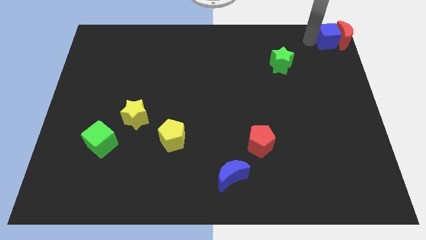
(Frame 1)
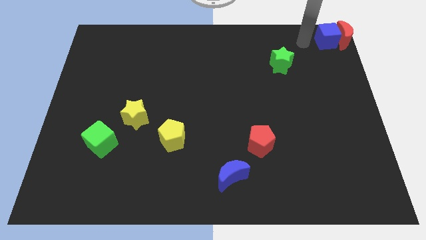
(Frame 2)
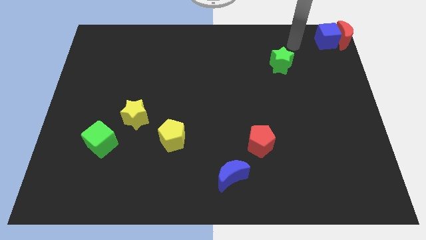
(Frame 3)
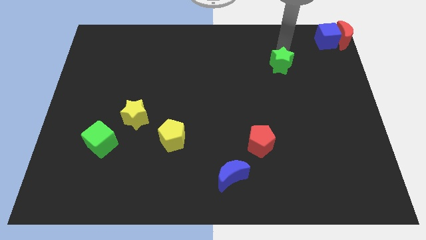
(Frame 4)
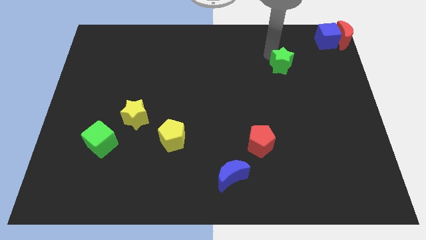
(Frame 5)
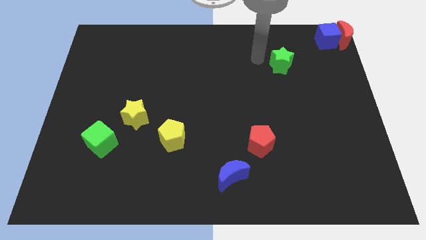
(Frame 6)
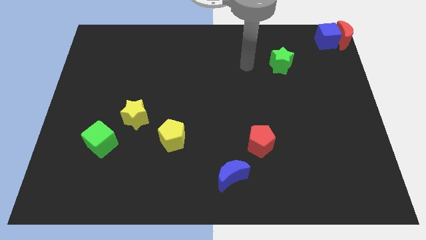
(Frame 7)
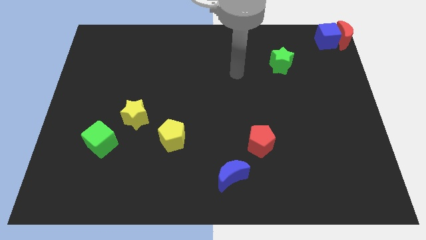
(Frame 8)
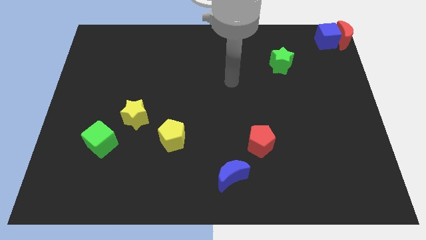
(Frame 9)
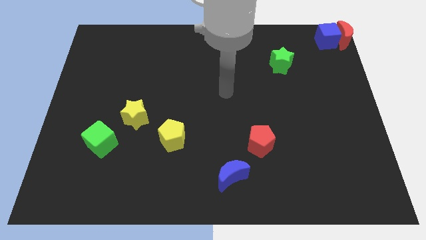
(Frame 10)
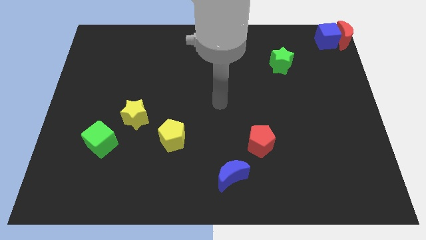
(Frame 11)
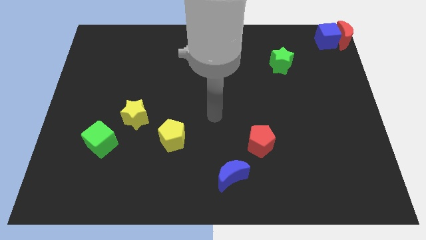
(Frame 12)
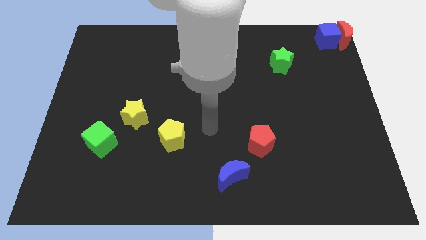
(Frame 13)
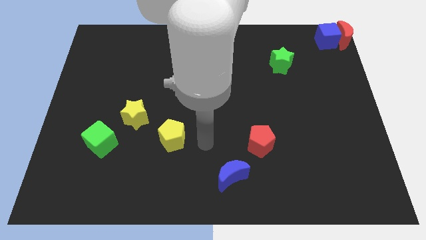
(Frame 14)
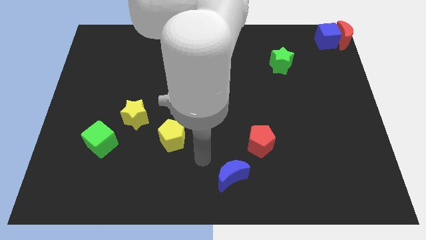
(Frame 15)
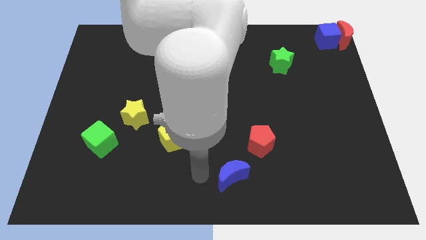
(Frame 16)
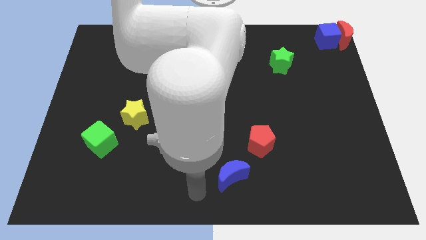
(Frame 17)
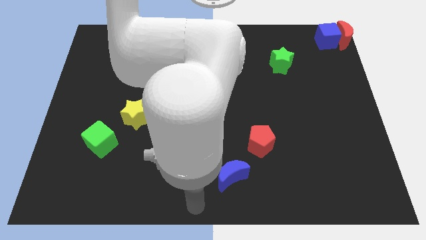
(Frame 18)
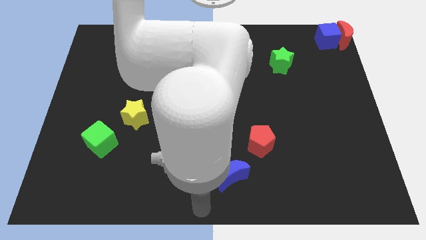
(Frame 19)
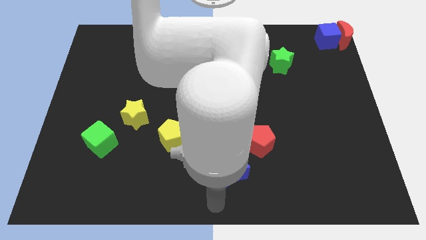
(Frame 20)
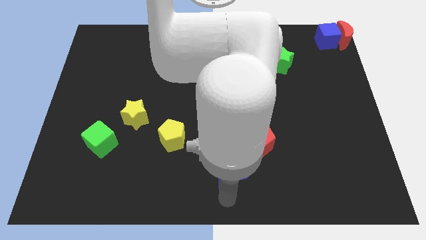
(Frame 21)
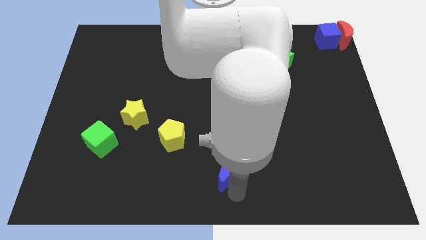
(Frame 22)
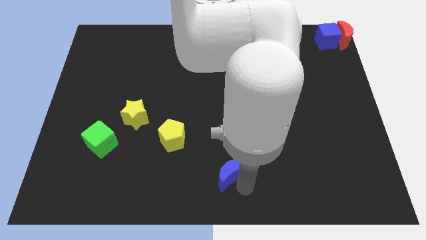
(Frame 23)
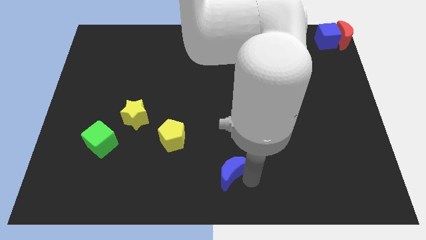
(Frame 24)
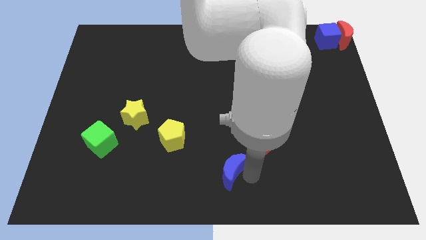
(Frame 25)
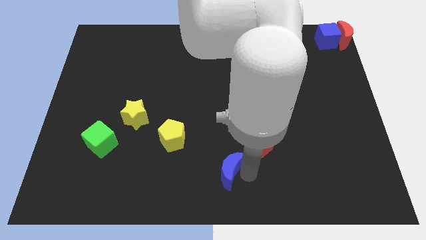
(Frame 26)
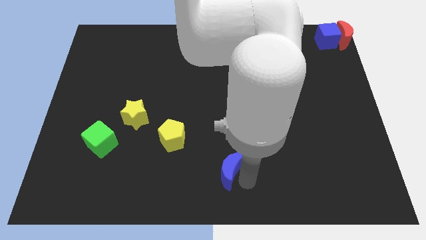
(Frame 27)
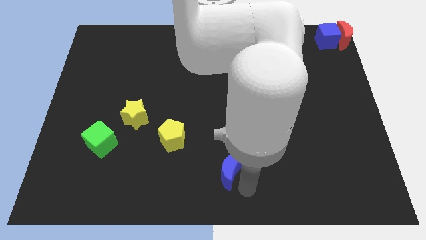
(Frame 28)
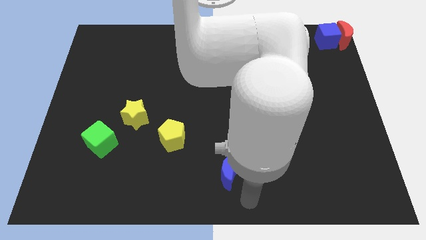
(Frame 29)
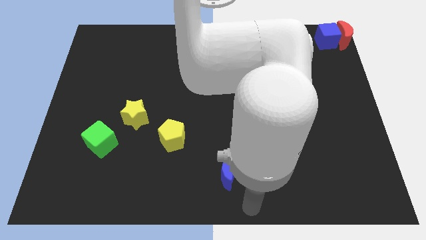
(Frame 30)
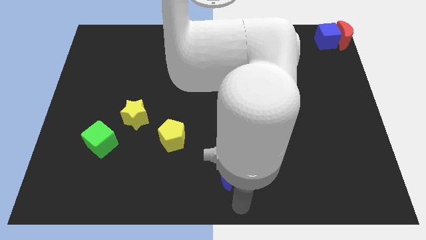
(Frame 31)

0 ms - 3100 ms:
place the arm at the bottom of the blue moon

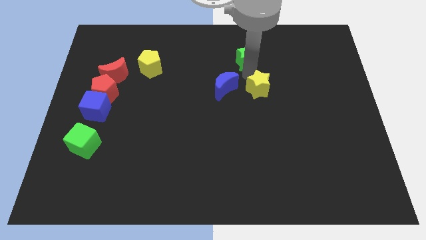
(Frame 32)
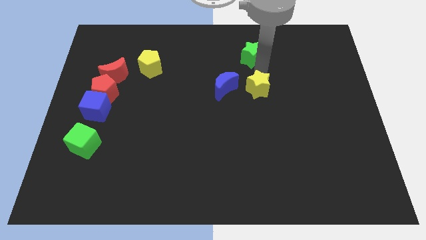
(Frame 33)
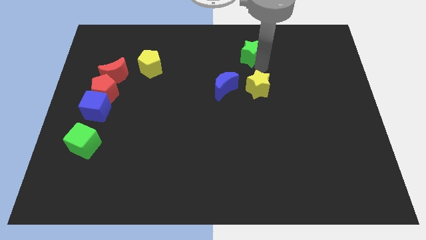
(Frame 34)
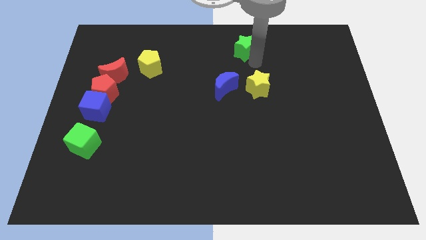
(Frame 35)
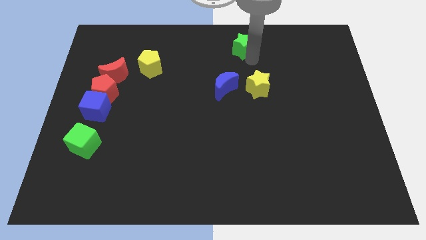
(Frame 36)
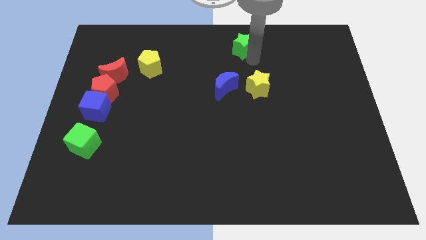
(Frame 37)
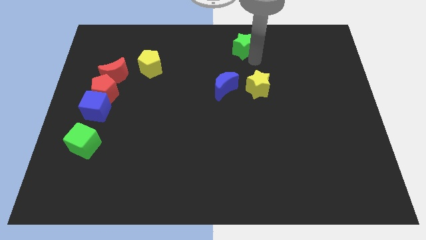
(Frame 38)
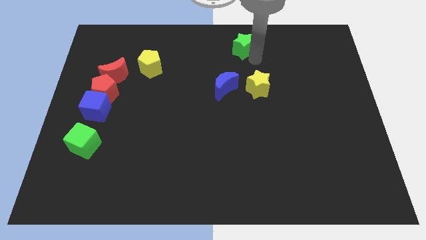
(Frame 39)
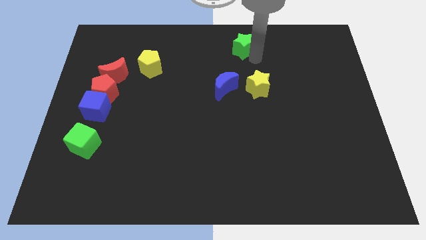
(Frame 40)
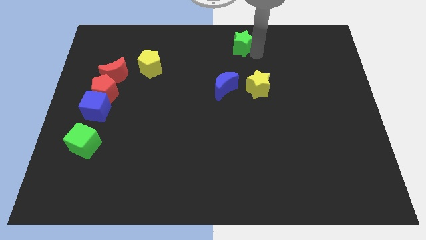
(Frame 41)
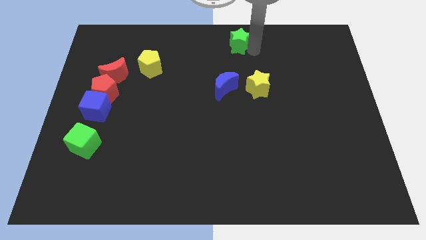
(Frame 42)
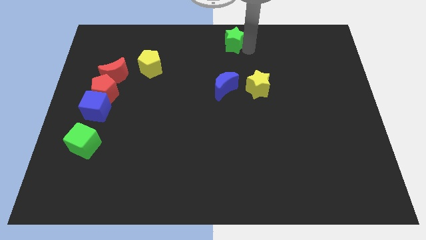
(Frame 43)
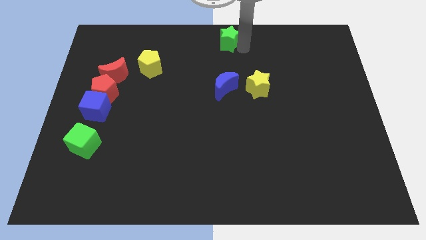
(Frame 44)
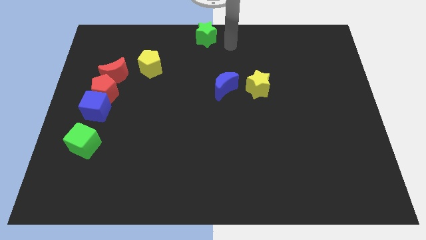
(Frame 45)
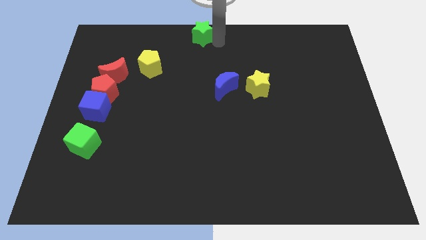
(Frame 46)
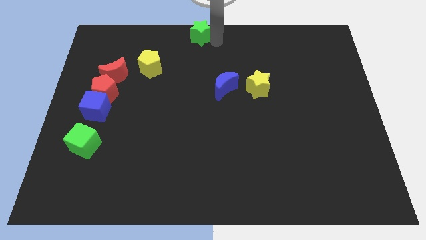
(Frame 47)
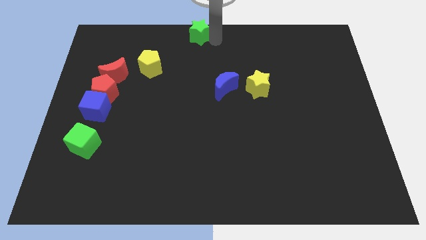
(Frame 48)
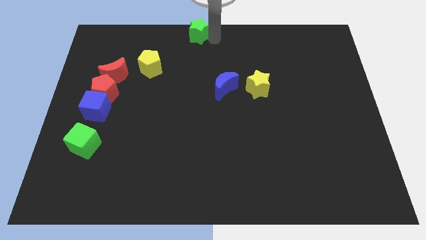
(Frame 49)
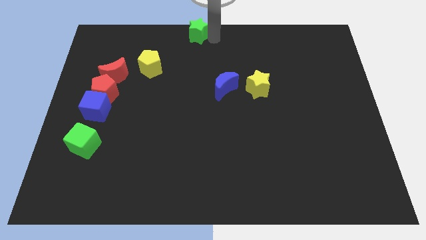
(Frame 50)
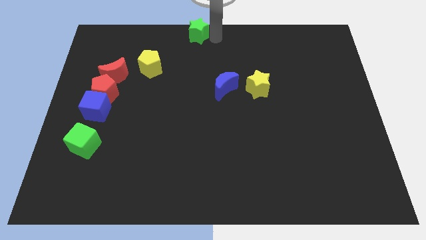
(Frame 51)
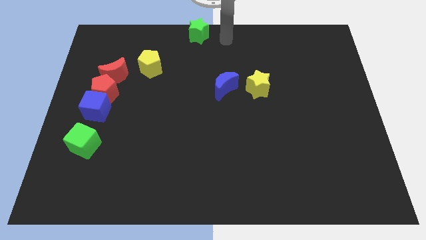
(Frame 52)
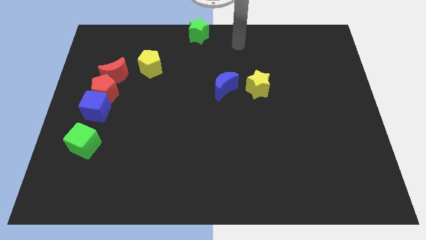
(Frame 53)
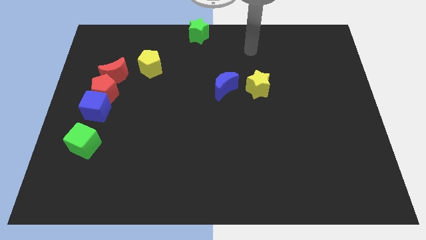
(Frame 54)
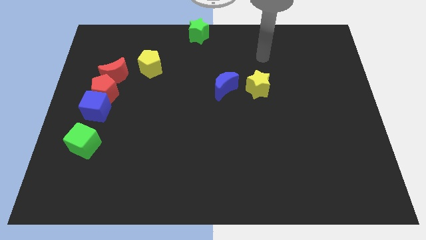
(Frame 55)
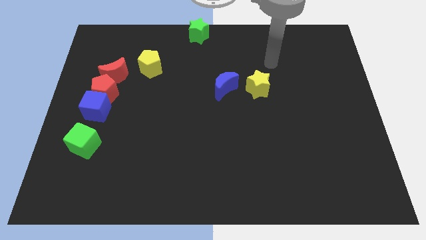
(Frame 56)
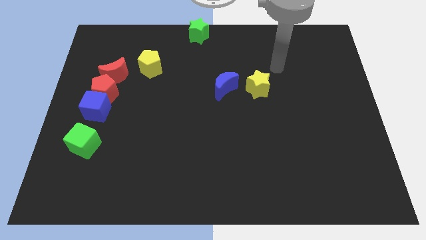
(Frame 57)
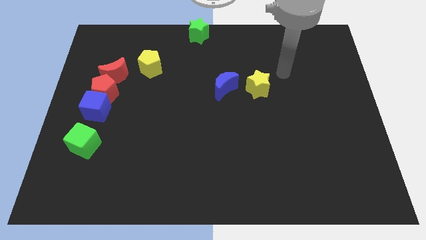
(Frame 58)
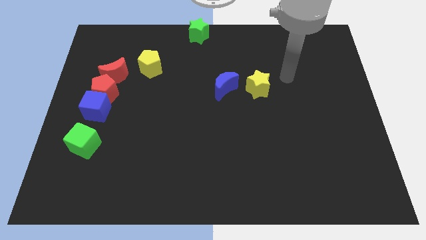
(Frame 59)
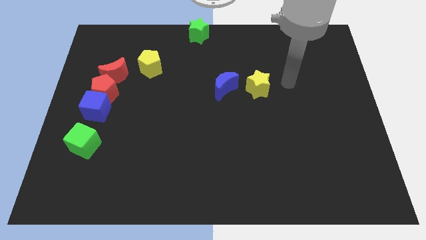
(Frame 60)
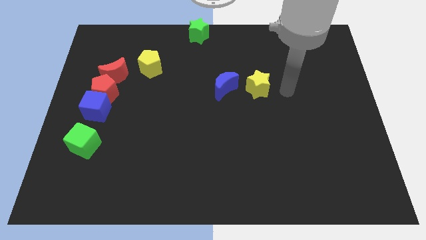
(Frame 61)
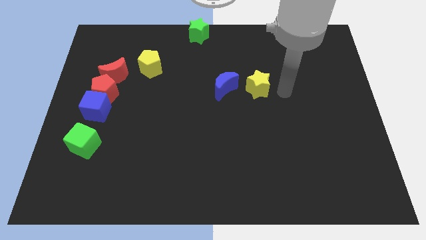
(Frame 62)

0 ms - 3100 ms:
place the green star at the top center of the board

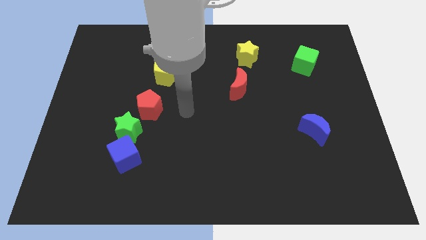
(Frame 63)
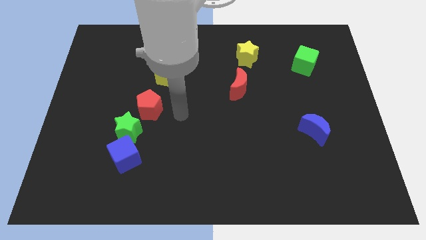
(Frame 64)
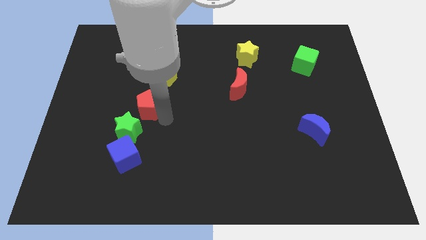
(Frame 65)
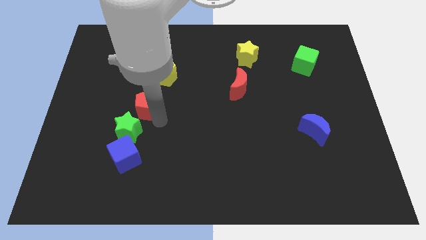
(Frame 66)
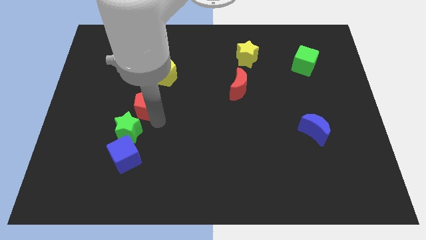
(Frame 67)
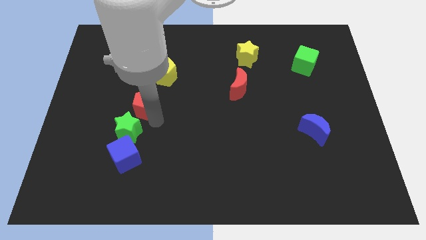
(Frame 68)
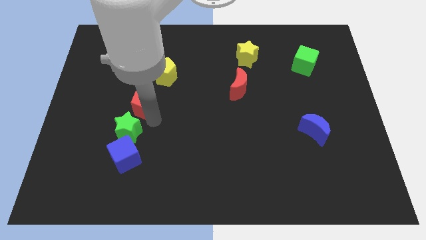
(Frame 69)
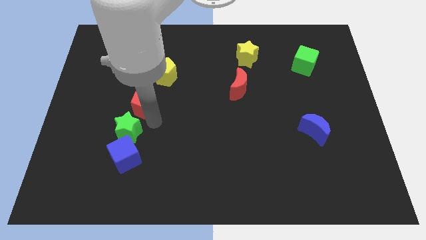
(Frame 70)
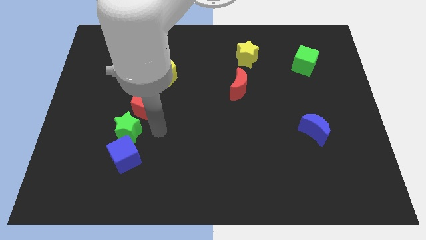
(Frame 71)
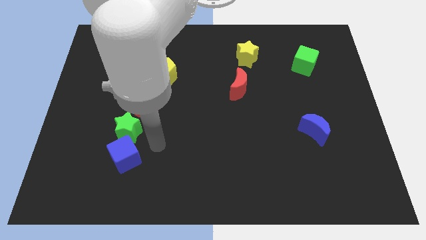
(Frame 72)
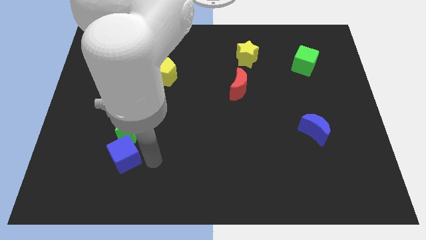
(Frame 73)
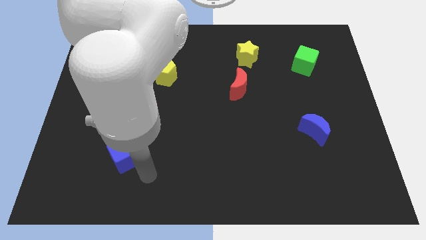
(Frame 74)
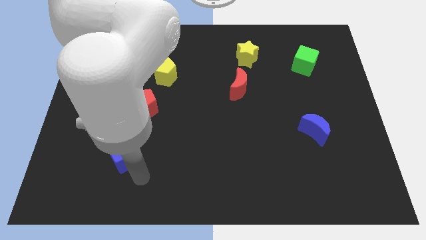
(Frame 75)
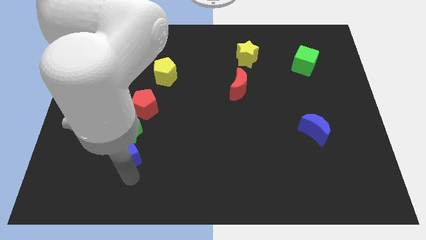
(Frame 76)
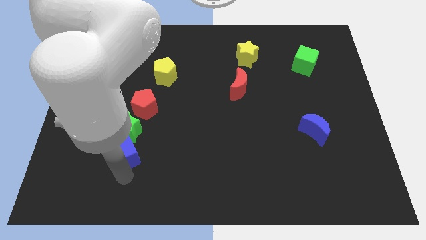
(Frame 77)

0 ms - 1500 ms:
push the red pentagon slightly to the left and move away from it

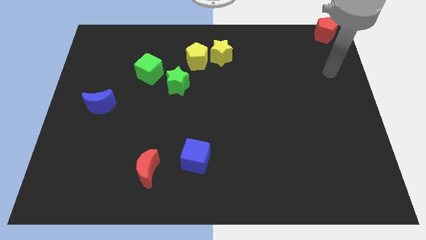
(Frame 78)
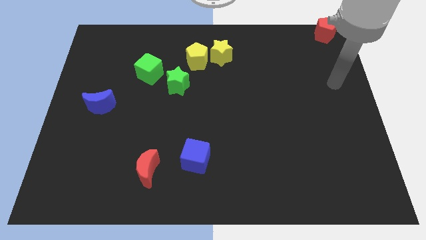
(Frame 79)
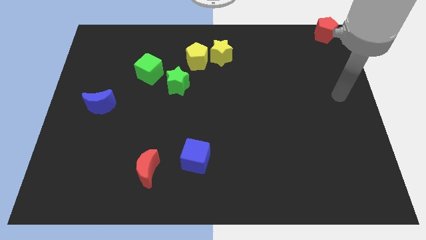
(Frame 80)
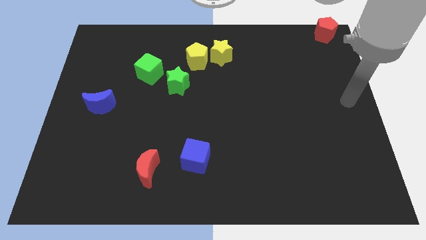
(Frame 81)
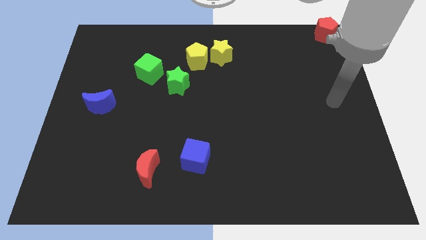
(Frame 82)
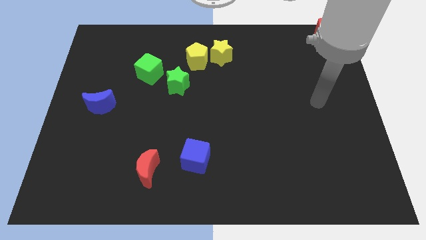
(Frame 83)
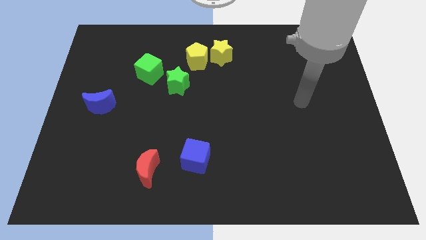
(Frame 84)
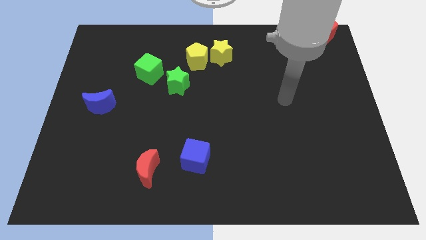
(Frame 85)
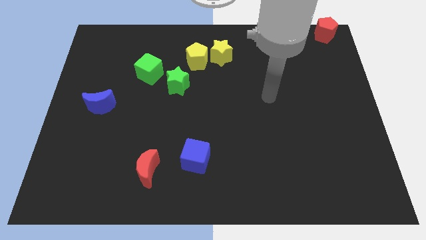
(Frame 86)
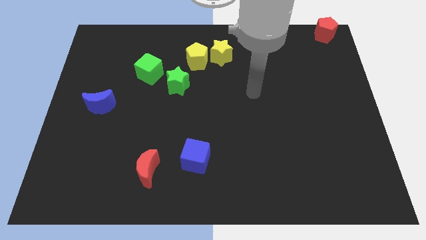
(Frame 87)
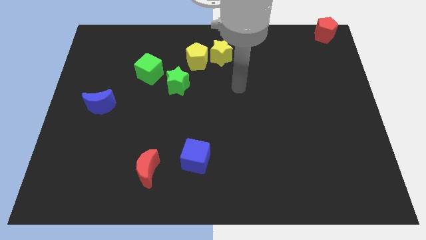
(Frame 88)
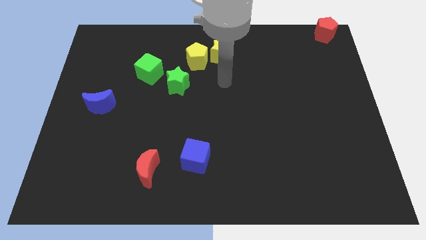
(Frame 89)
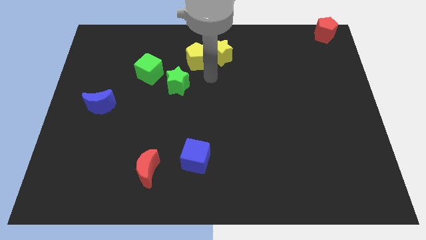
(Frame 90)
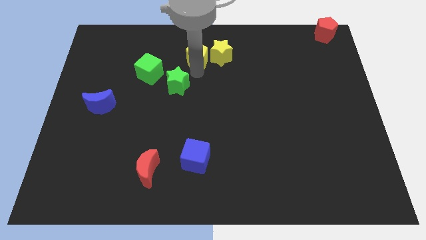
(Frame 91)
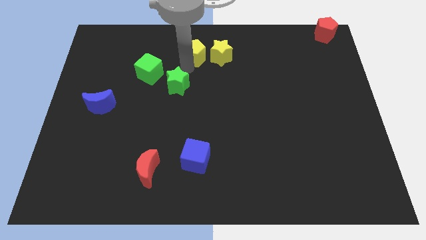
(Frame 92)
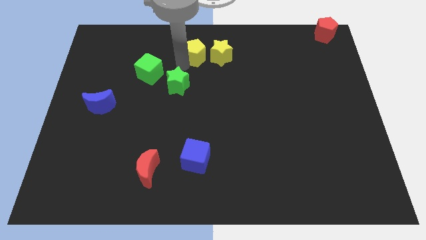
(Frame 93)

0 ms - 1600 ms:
tap the yellow pentagon
